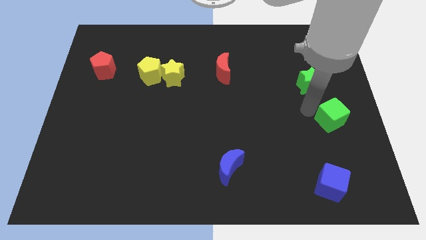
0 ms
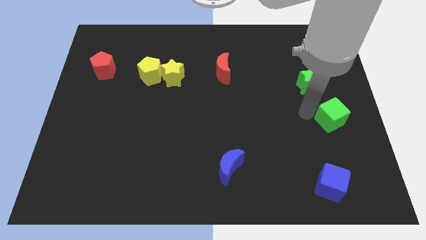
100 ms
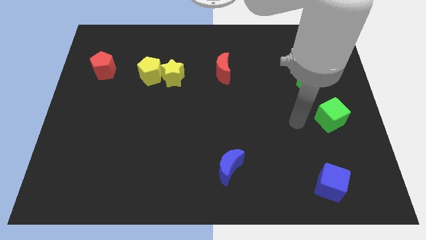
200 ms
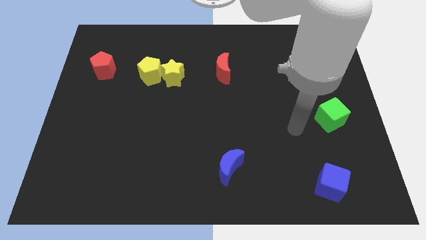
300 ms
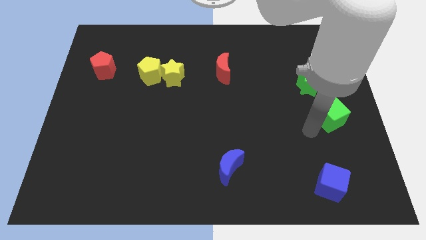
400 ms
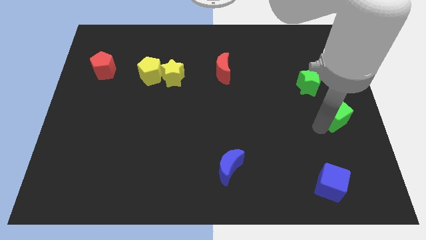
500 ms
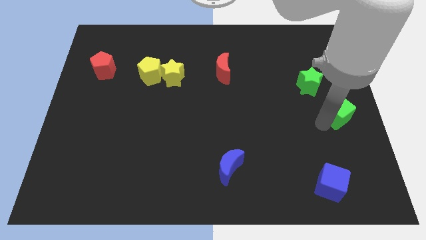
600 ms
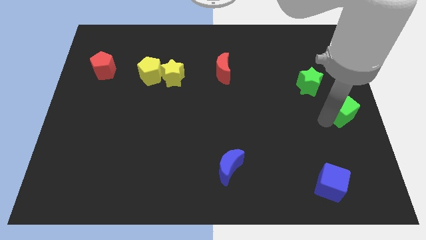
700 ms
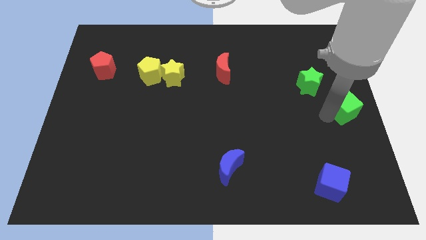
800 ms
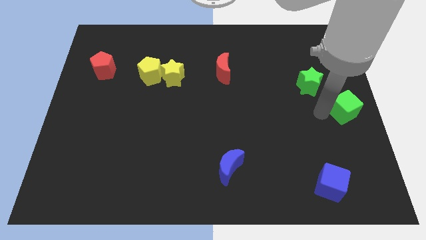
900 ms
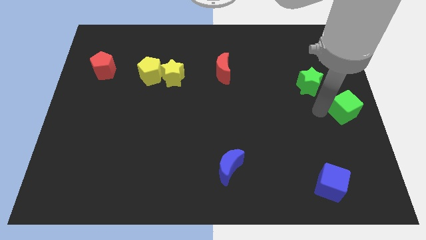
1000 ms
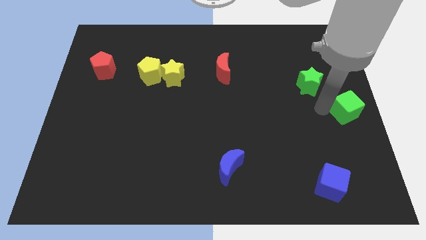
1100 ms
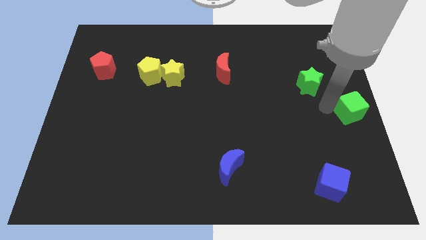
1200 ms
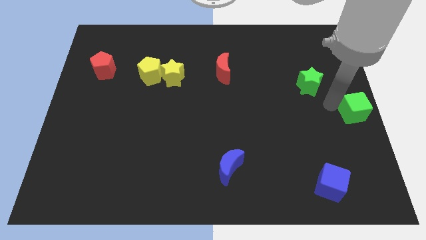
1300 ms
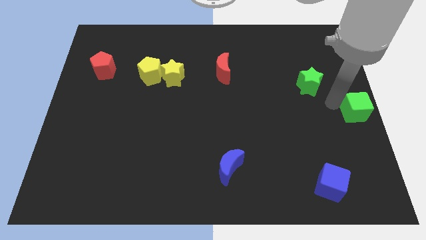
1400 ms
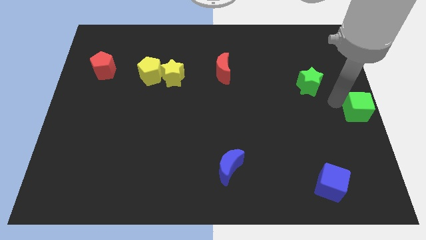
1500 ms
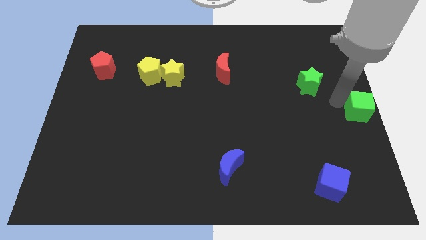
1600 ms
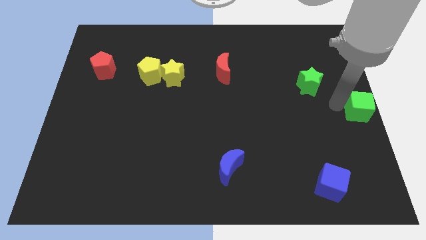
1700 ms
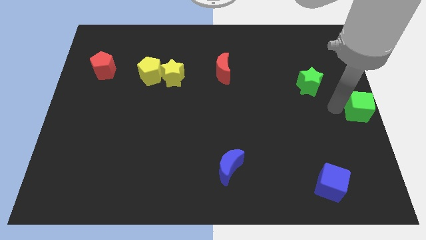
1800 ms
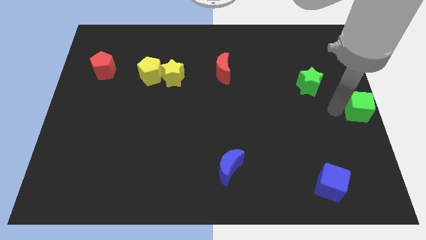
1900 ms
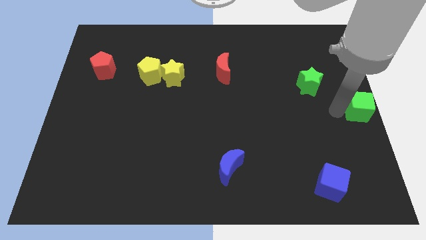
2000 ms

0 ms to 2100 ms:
move green cube to the center right

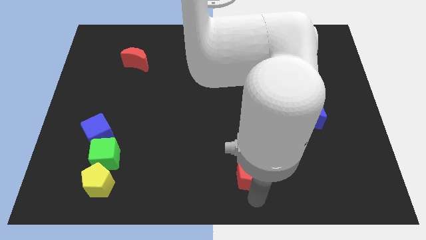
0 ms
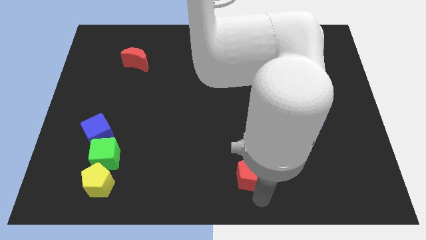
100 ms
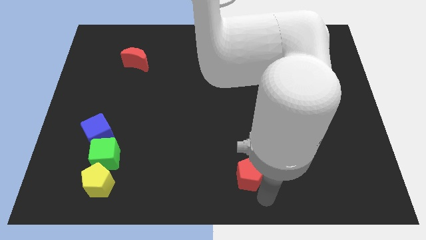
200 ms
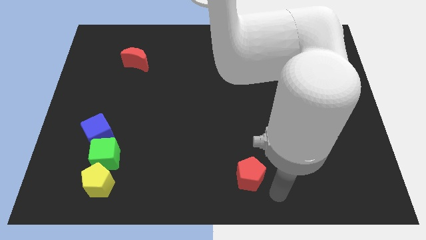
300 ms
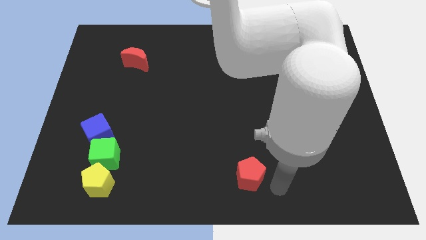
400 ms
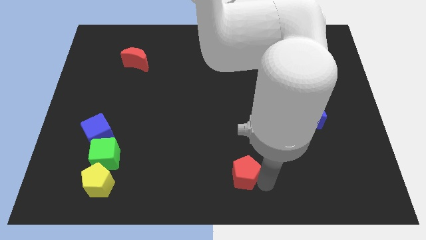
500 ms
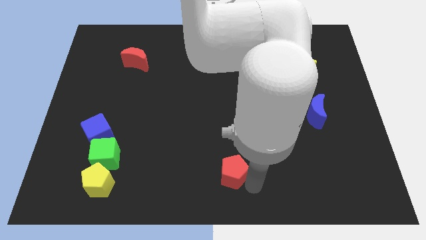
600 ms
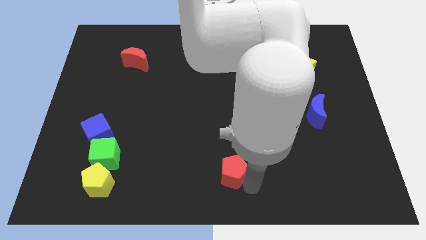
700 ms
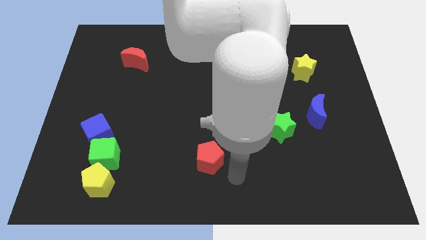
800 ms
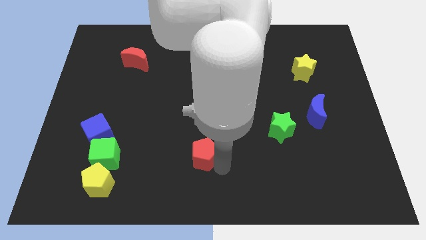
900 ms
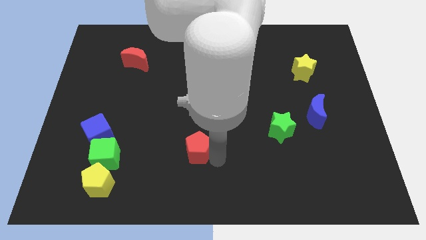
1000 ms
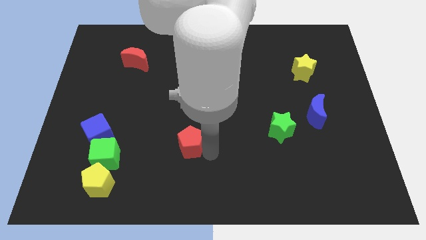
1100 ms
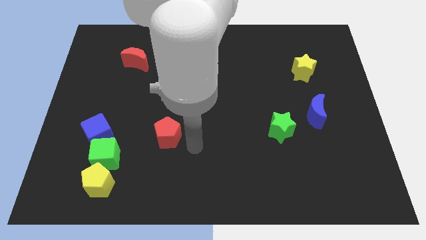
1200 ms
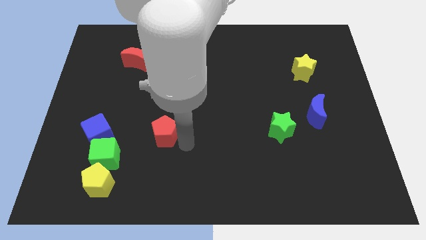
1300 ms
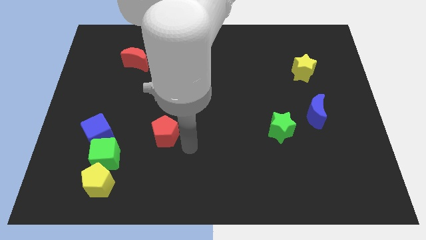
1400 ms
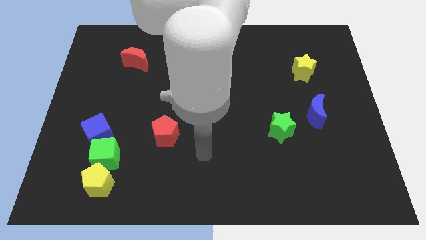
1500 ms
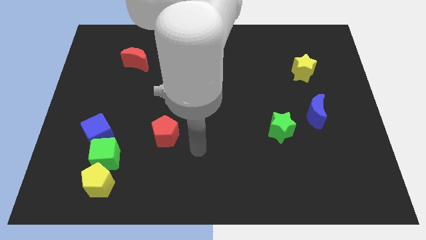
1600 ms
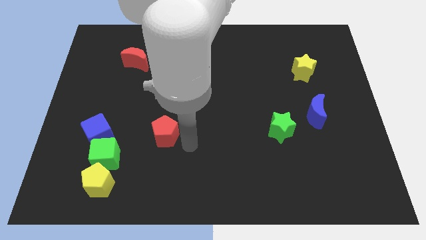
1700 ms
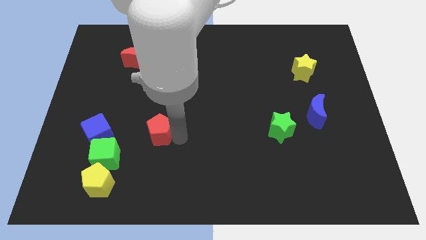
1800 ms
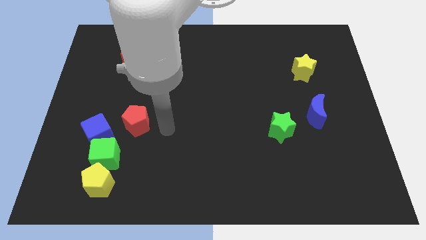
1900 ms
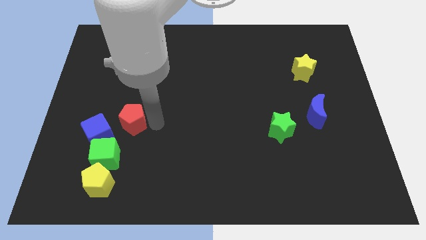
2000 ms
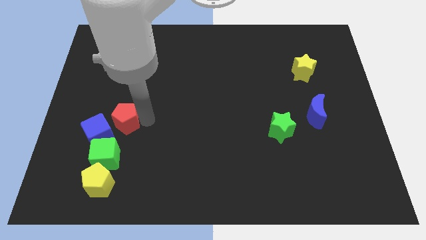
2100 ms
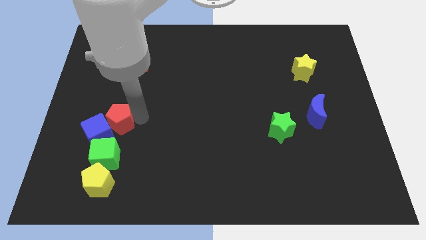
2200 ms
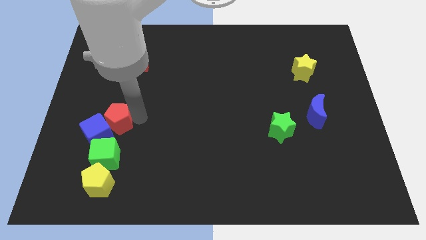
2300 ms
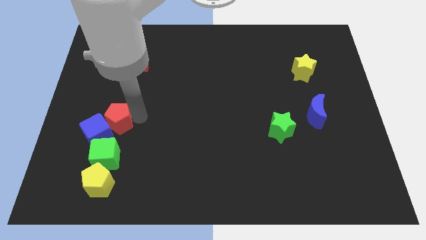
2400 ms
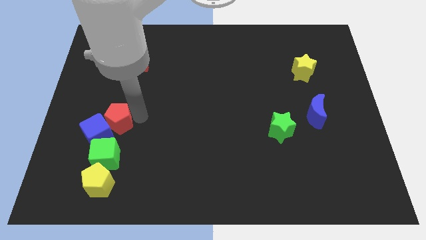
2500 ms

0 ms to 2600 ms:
move red pentagon towards blue cube

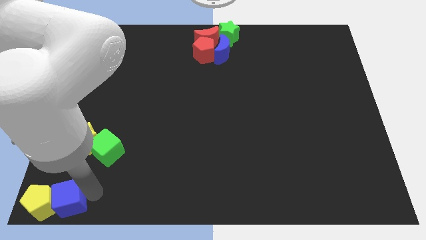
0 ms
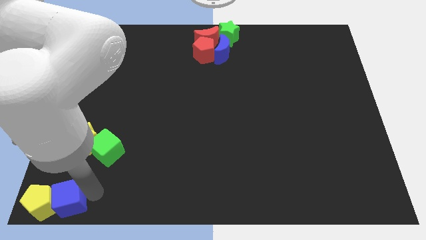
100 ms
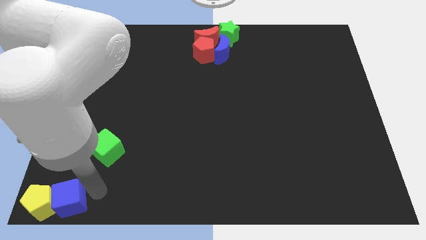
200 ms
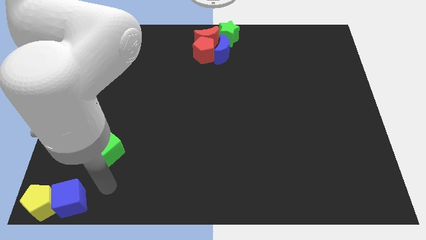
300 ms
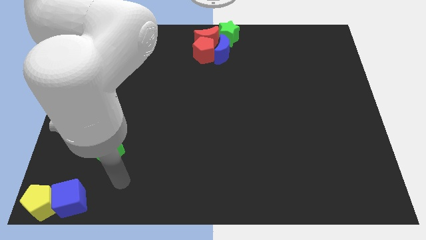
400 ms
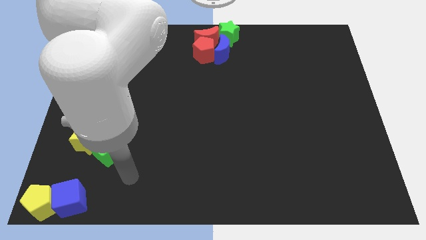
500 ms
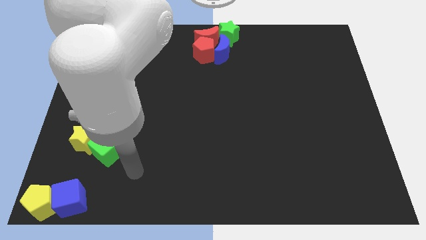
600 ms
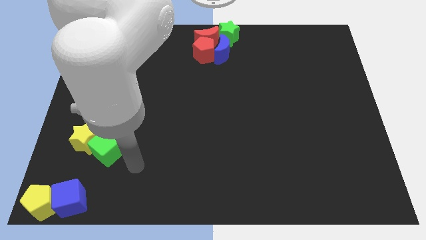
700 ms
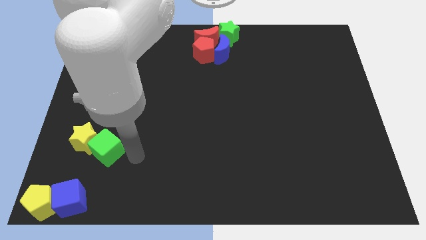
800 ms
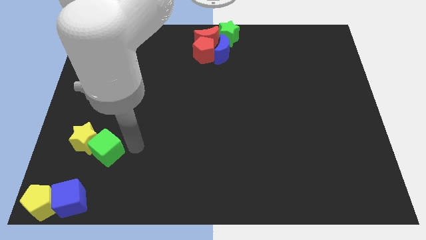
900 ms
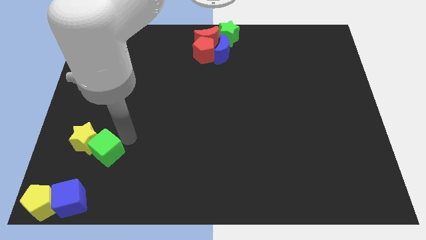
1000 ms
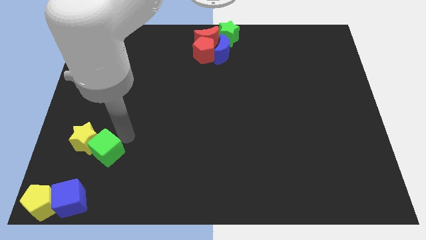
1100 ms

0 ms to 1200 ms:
move your arm to the right of the green cube

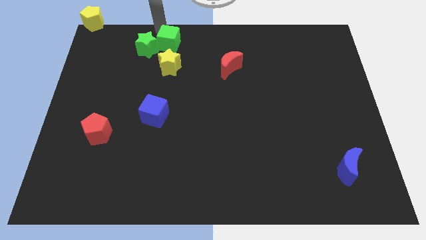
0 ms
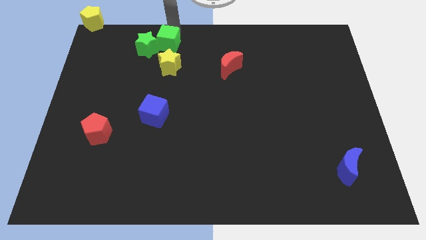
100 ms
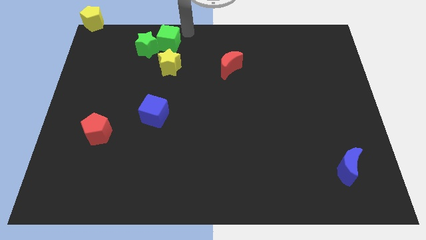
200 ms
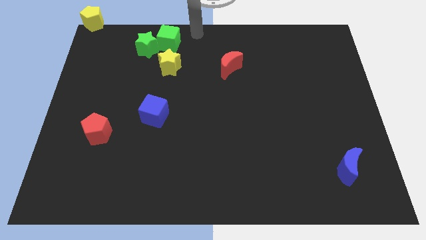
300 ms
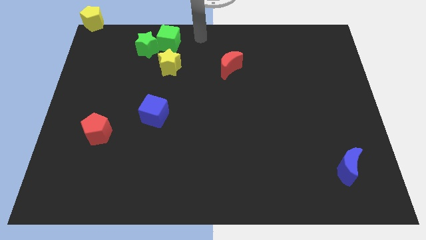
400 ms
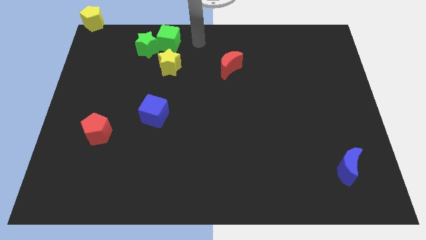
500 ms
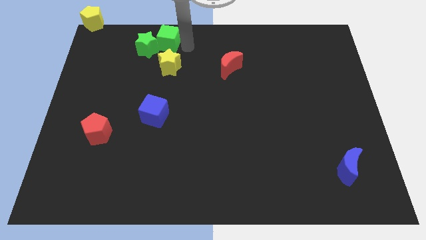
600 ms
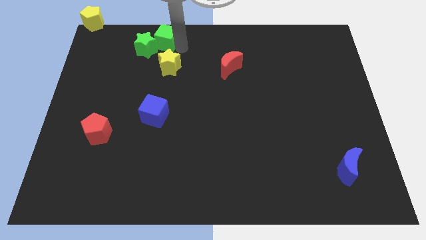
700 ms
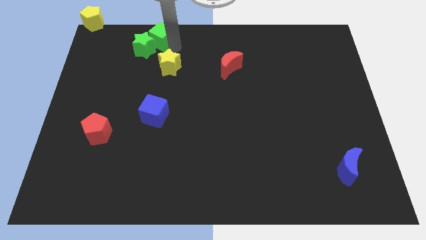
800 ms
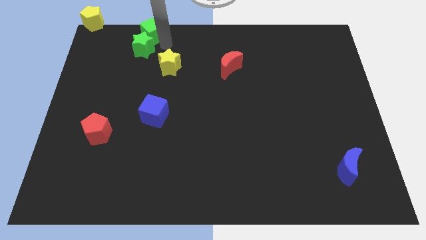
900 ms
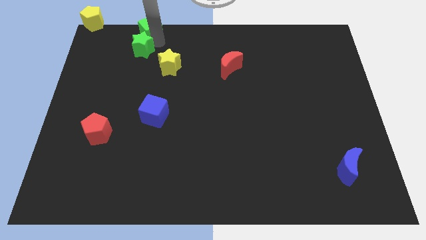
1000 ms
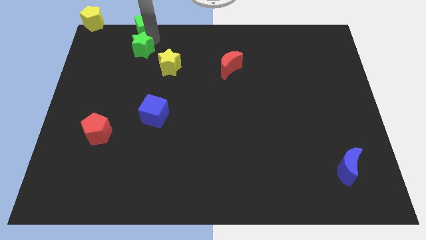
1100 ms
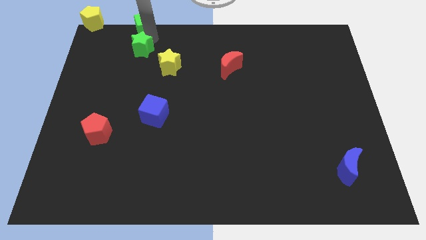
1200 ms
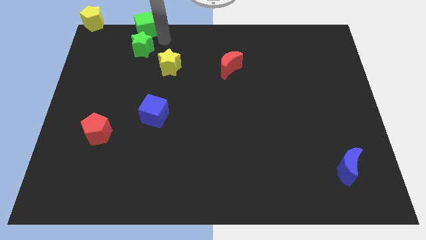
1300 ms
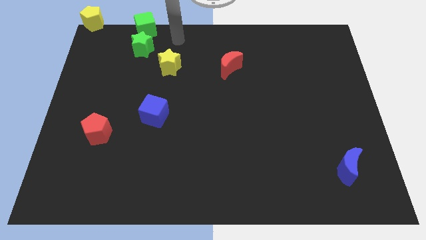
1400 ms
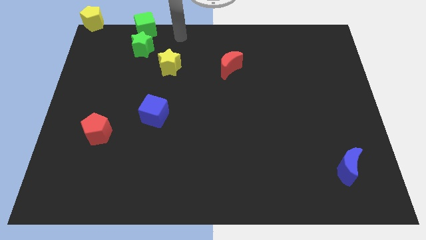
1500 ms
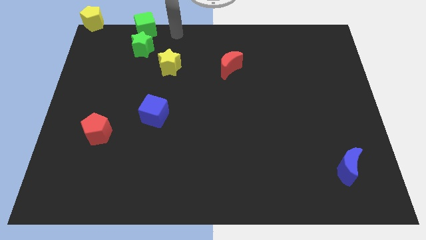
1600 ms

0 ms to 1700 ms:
separate both the green blocks from each other

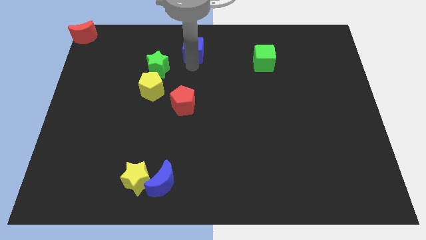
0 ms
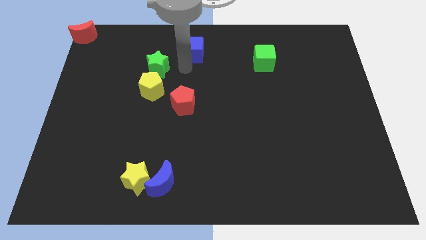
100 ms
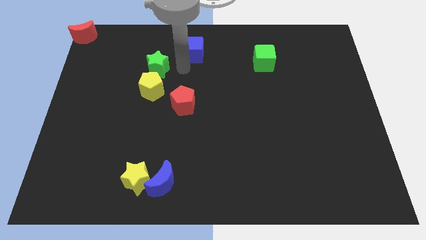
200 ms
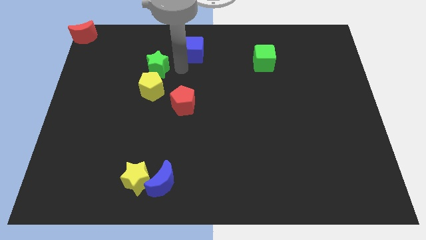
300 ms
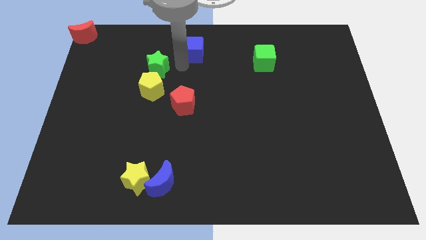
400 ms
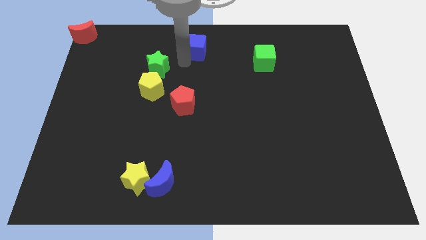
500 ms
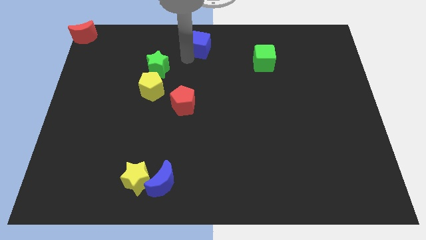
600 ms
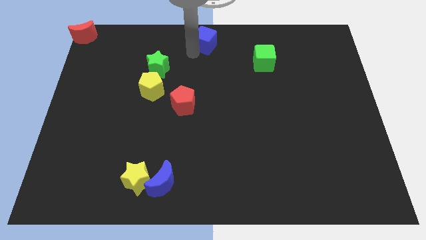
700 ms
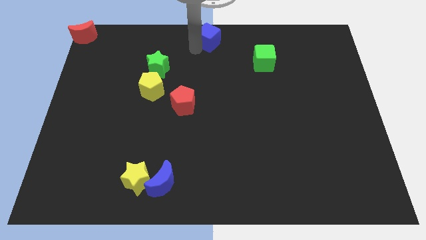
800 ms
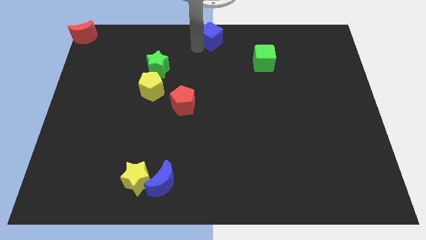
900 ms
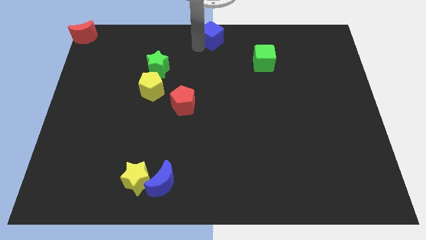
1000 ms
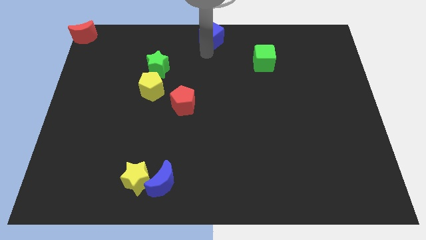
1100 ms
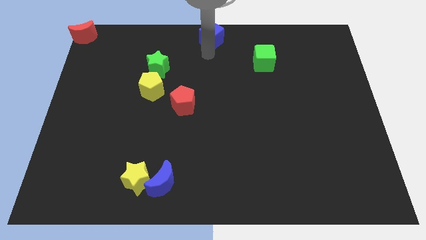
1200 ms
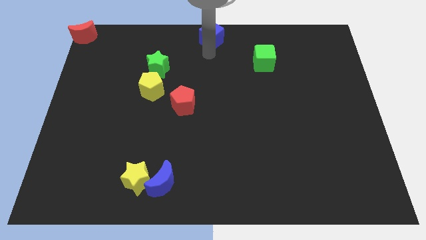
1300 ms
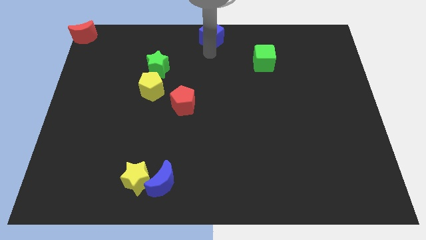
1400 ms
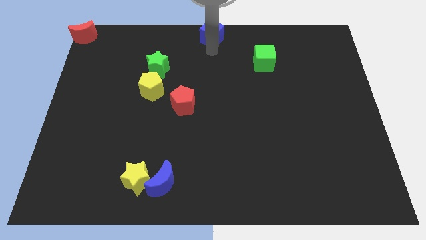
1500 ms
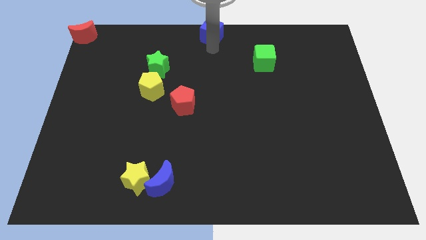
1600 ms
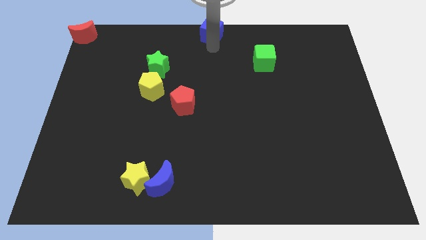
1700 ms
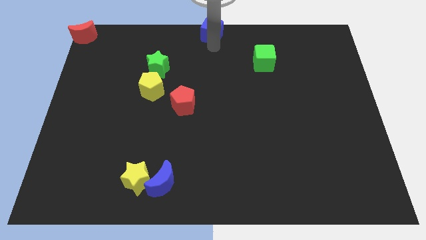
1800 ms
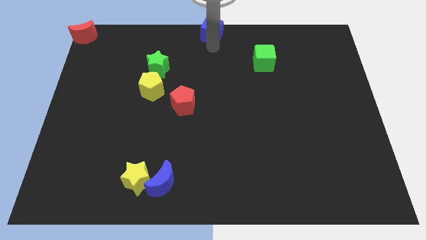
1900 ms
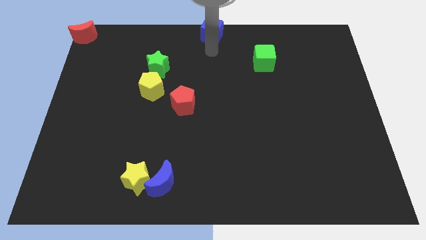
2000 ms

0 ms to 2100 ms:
place blue cube at the top center
